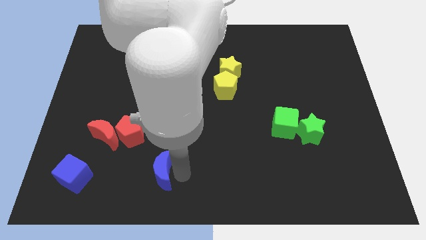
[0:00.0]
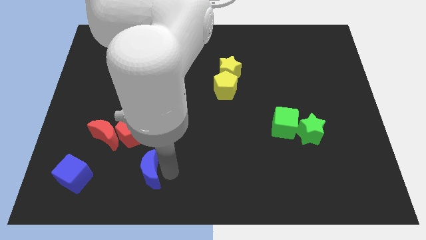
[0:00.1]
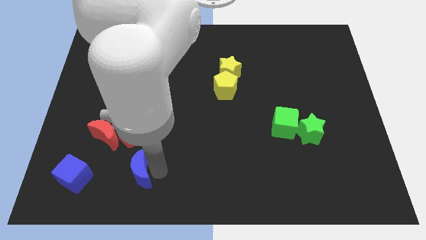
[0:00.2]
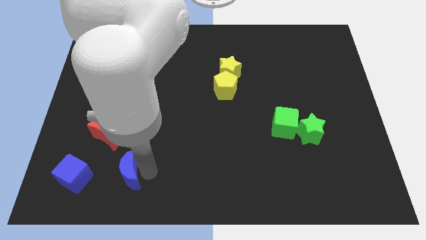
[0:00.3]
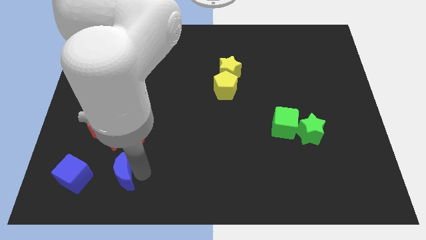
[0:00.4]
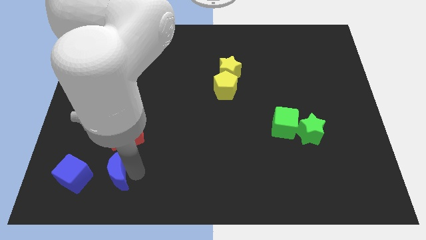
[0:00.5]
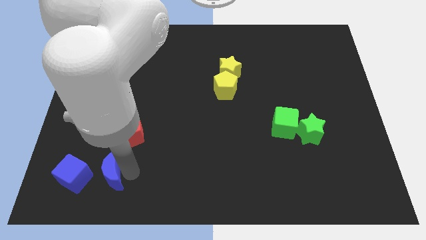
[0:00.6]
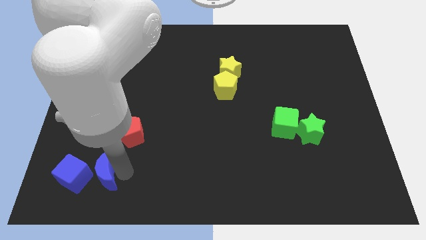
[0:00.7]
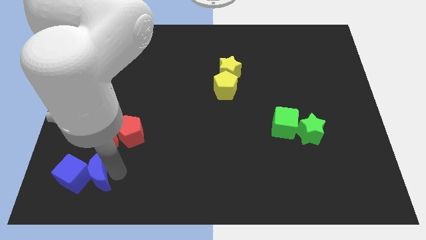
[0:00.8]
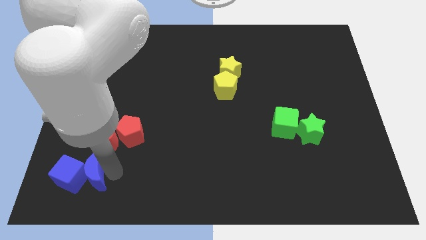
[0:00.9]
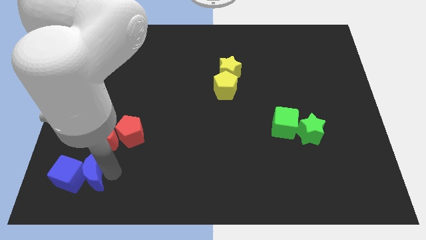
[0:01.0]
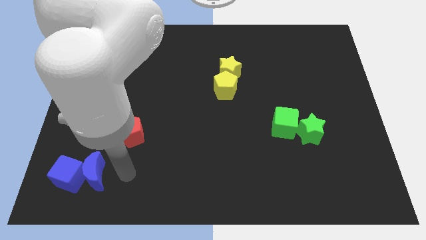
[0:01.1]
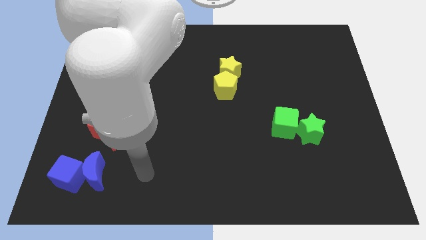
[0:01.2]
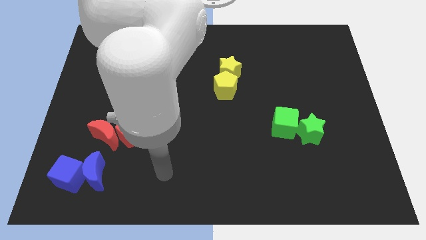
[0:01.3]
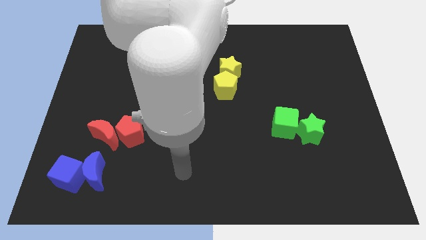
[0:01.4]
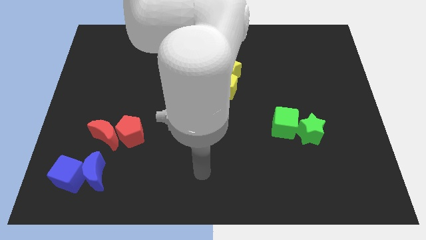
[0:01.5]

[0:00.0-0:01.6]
put blue blocks together

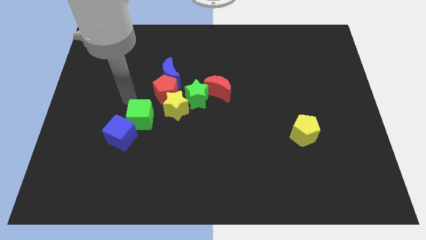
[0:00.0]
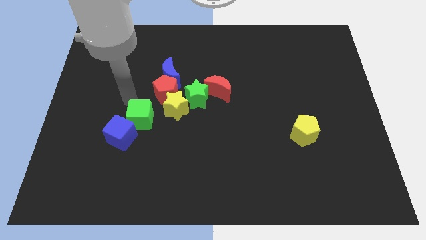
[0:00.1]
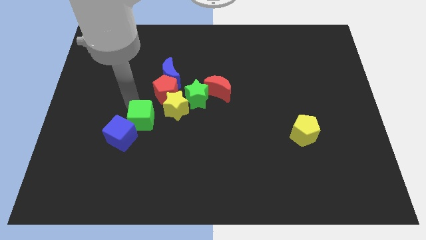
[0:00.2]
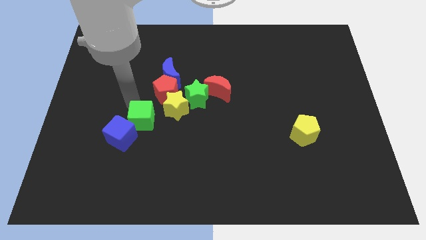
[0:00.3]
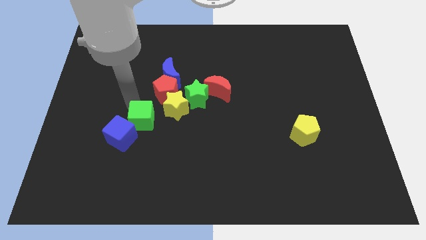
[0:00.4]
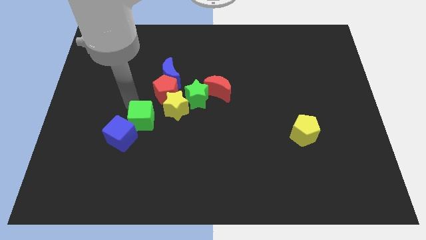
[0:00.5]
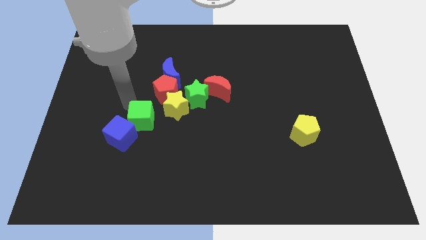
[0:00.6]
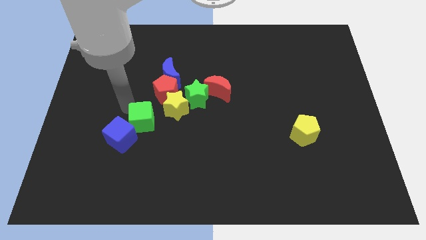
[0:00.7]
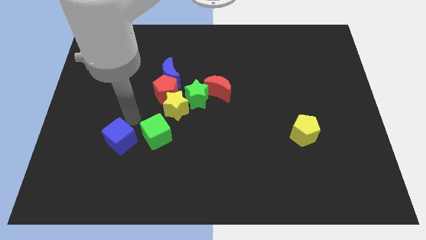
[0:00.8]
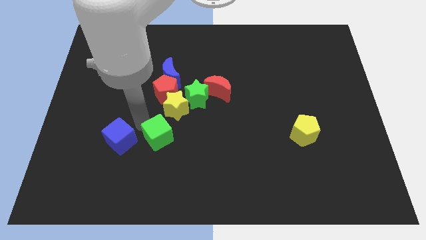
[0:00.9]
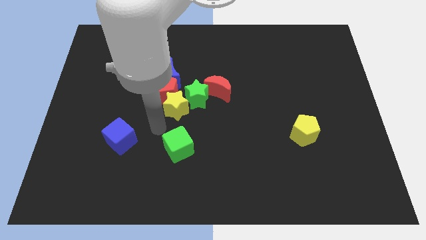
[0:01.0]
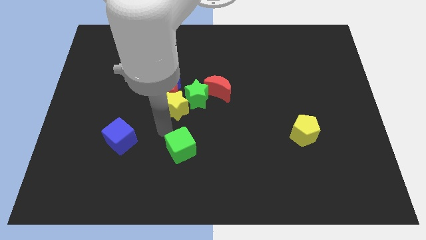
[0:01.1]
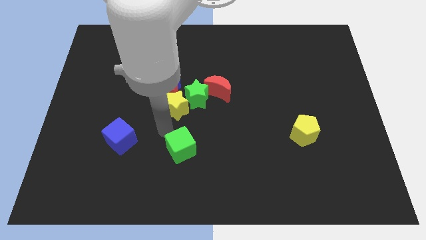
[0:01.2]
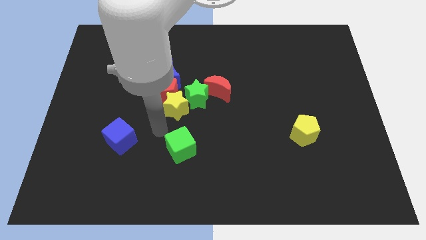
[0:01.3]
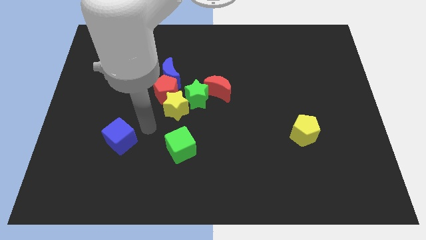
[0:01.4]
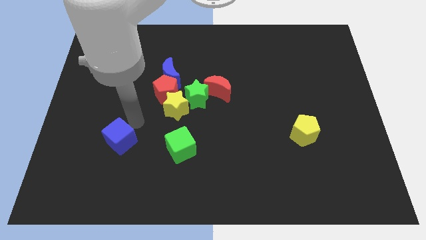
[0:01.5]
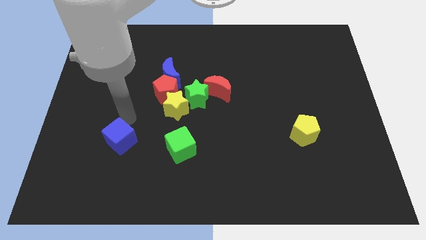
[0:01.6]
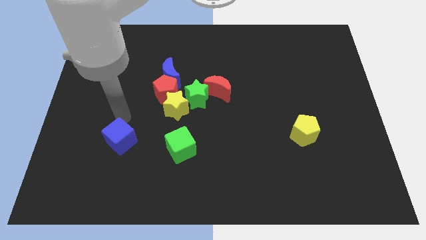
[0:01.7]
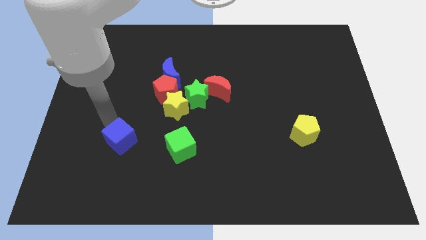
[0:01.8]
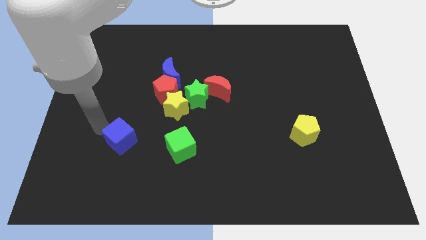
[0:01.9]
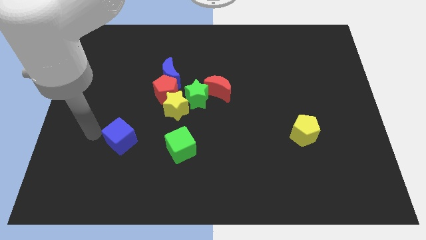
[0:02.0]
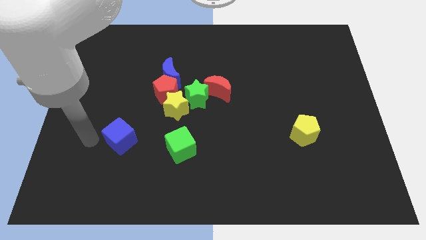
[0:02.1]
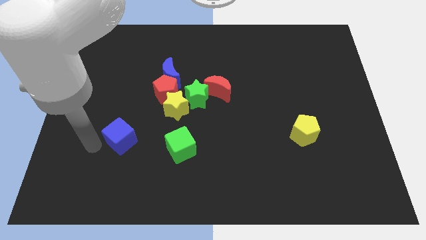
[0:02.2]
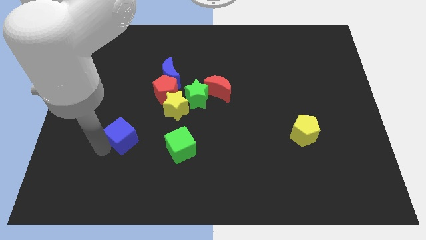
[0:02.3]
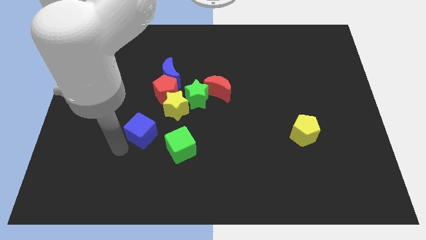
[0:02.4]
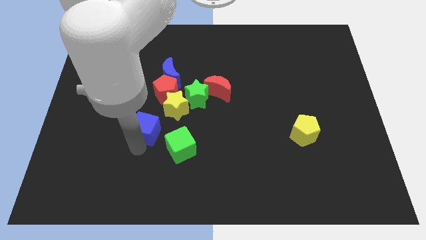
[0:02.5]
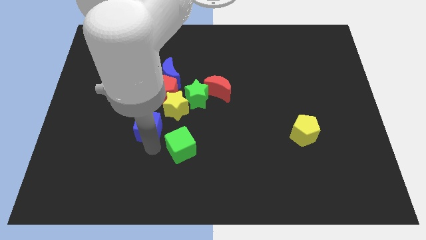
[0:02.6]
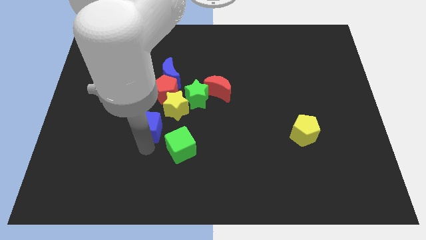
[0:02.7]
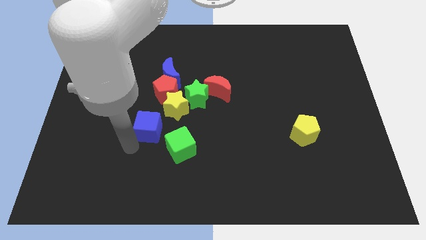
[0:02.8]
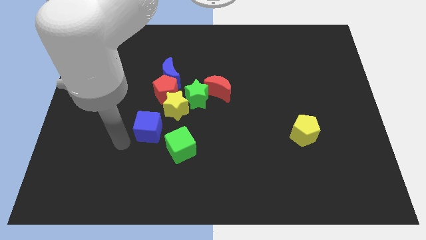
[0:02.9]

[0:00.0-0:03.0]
separate the green and blue cubes

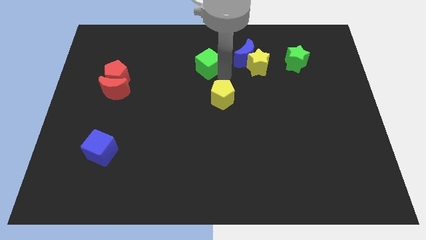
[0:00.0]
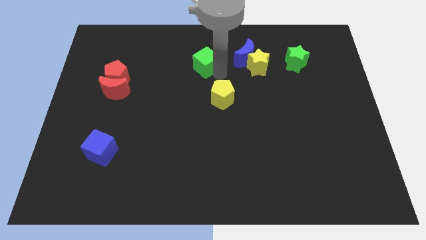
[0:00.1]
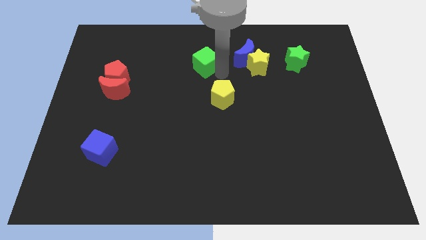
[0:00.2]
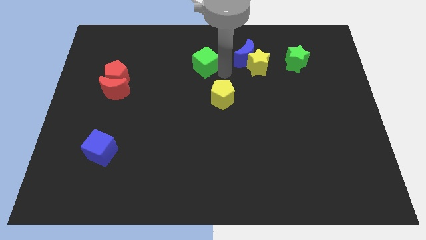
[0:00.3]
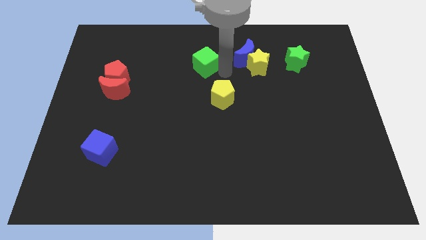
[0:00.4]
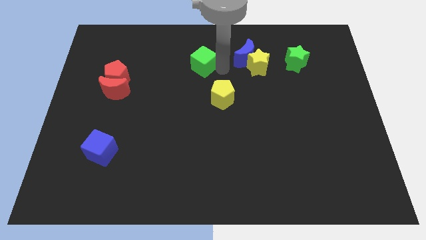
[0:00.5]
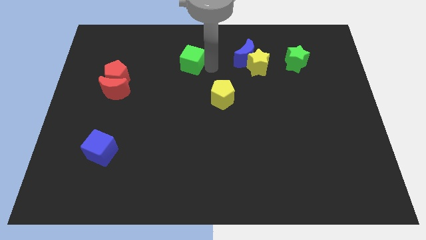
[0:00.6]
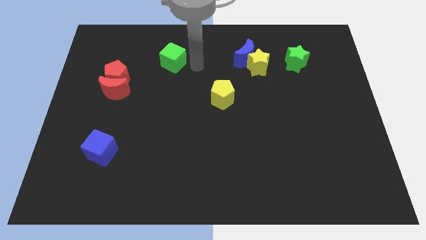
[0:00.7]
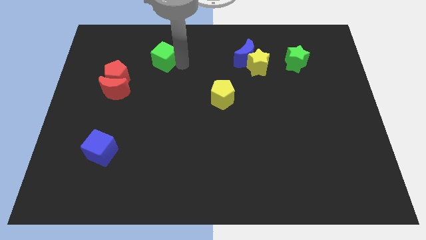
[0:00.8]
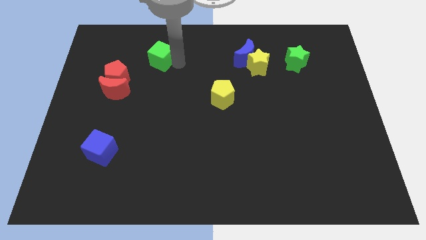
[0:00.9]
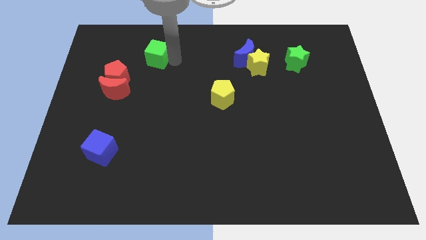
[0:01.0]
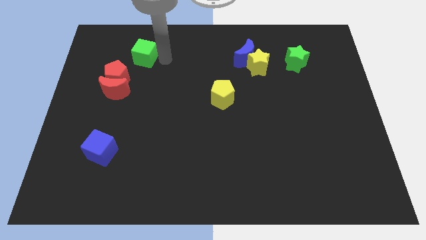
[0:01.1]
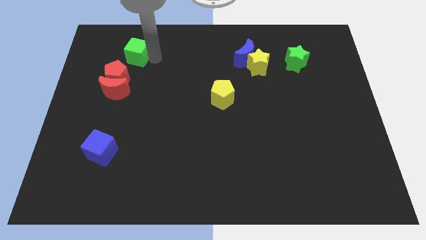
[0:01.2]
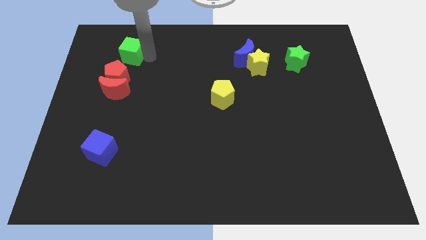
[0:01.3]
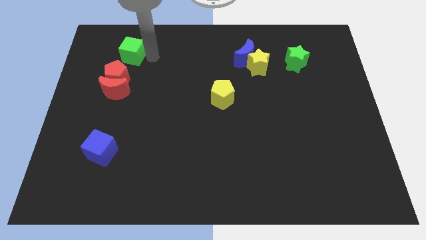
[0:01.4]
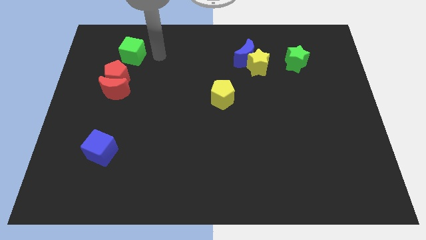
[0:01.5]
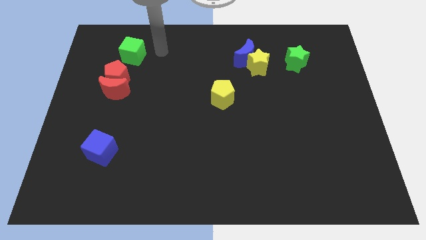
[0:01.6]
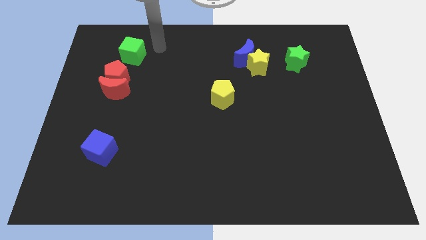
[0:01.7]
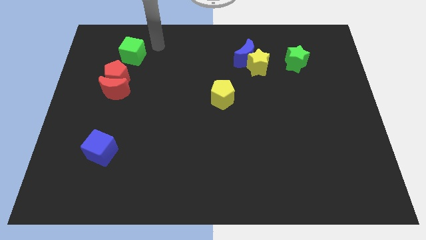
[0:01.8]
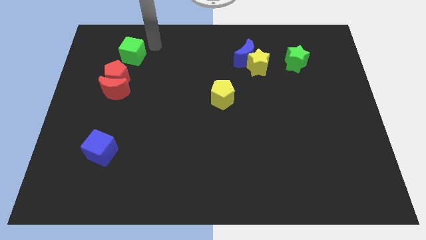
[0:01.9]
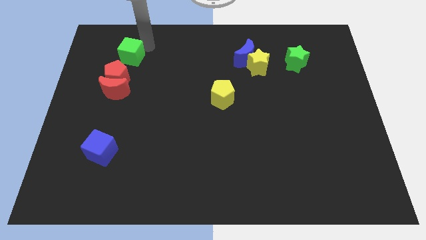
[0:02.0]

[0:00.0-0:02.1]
move green cube close to the red pentagon

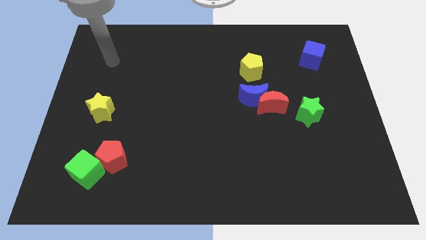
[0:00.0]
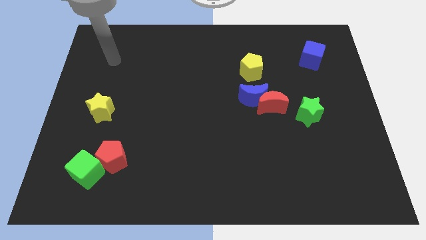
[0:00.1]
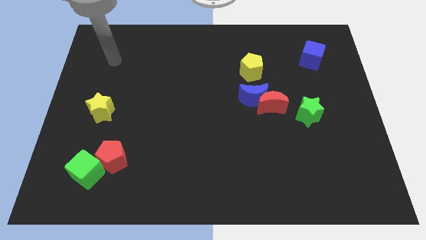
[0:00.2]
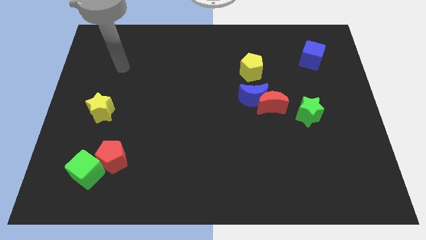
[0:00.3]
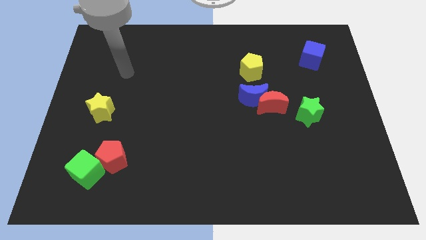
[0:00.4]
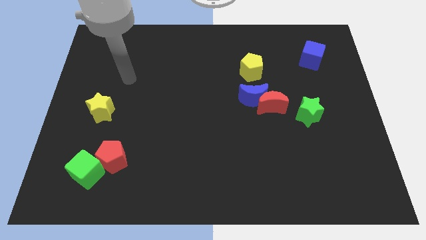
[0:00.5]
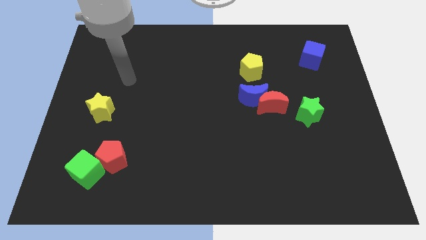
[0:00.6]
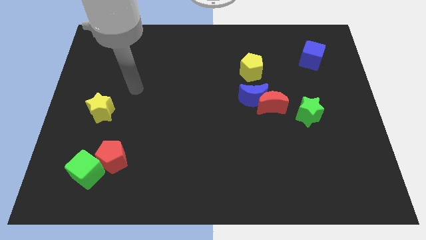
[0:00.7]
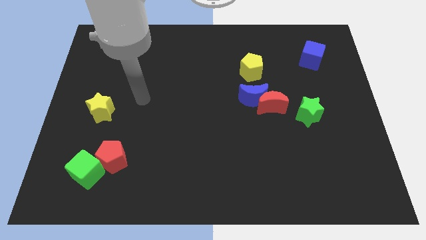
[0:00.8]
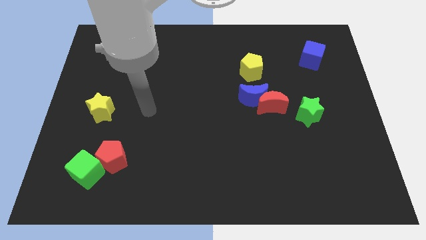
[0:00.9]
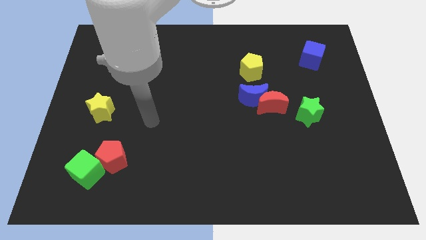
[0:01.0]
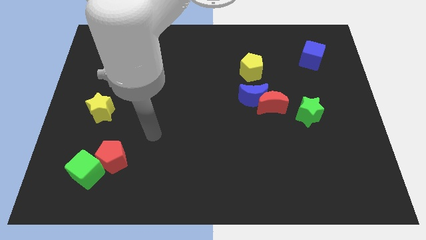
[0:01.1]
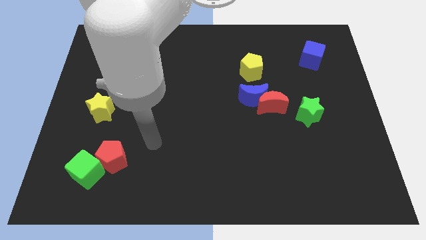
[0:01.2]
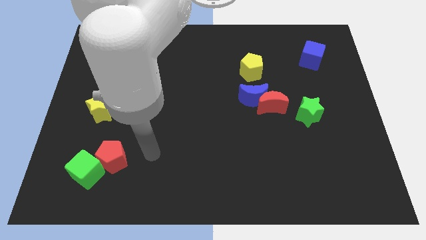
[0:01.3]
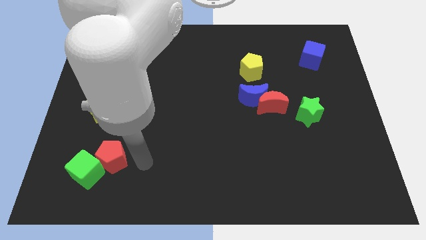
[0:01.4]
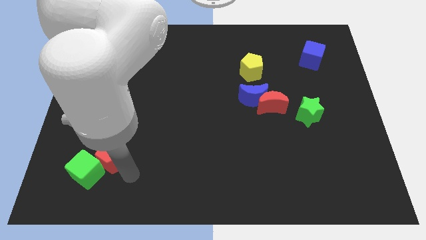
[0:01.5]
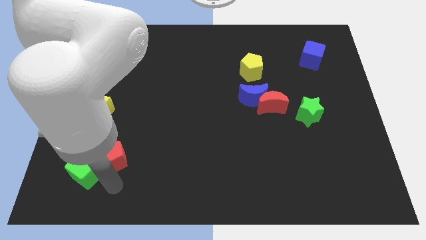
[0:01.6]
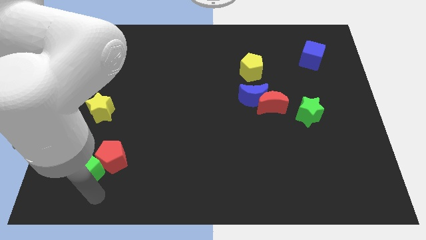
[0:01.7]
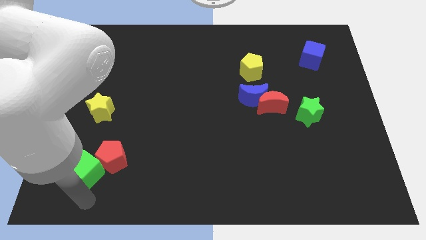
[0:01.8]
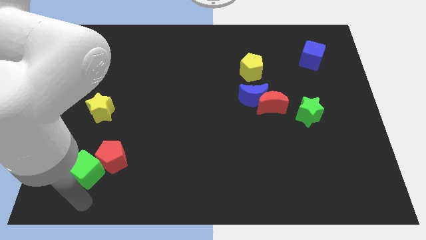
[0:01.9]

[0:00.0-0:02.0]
move your arm to the top of the green cube

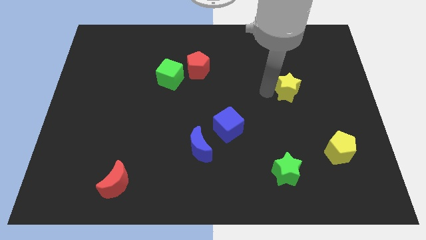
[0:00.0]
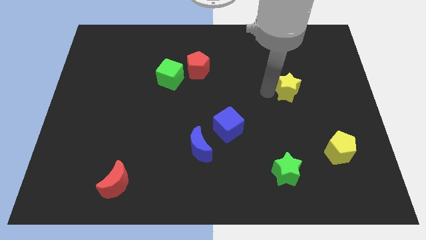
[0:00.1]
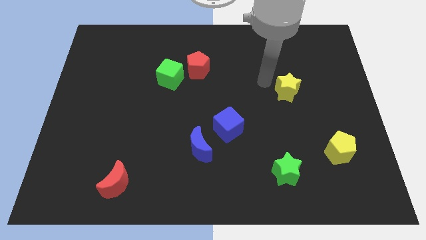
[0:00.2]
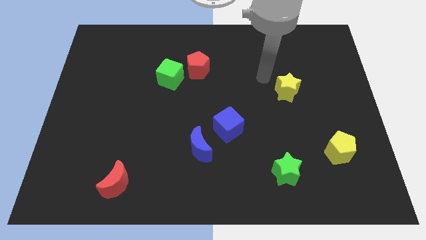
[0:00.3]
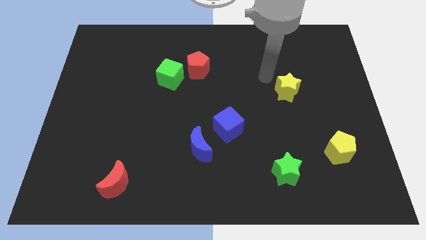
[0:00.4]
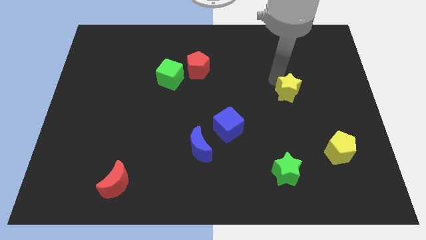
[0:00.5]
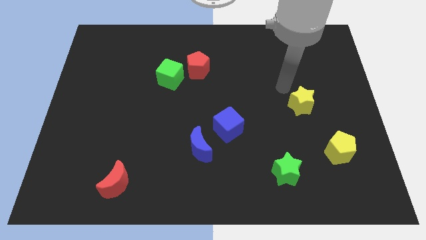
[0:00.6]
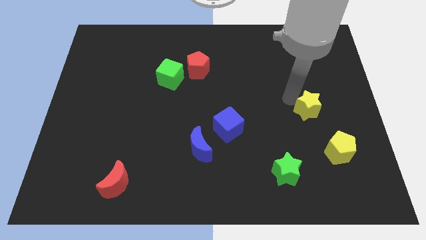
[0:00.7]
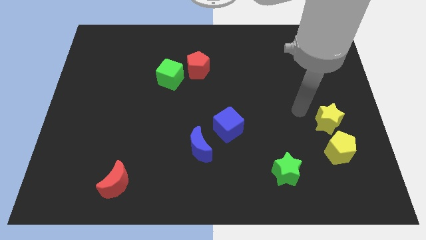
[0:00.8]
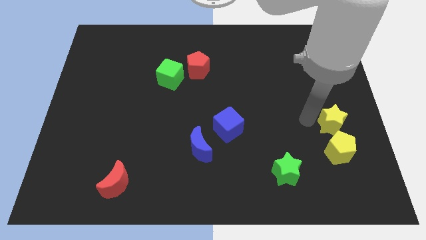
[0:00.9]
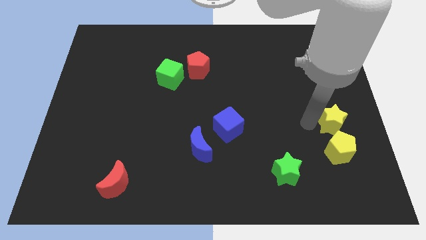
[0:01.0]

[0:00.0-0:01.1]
push the yellow star to the top left side of the yellow pentagon
